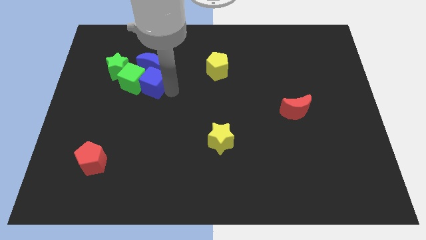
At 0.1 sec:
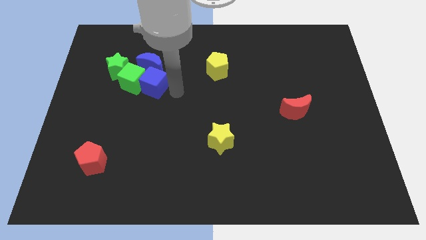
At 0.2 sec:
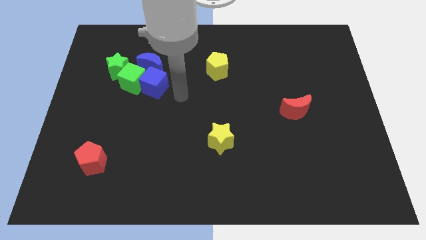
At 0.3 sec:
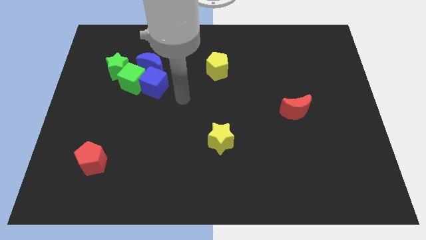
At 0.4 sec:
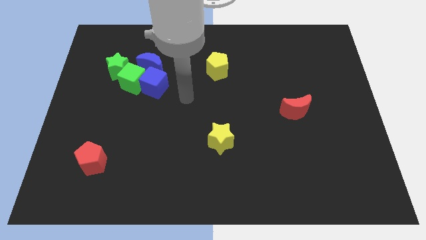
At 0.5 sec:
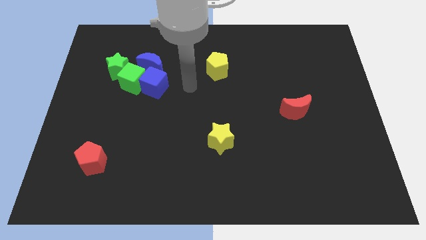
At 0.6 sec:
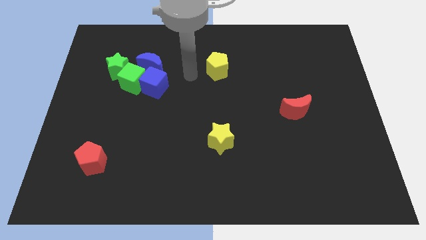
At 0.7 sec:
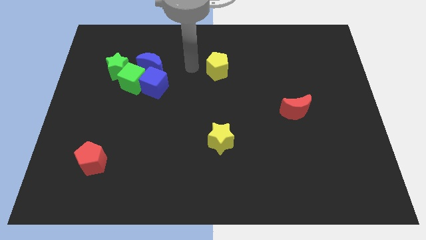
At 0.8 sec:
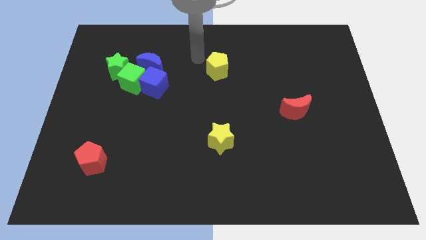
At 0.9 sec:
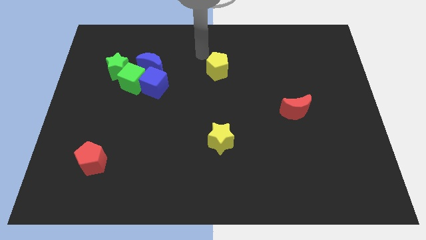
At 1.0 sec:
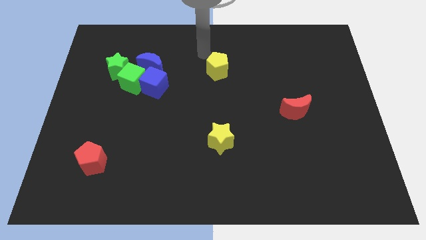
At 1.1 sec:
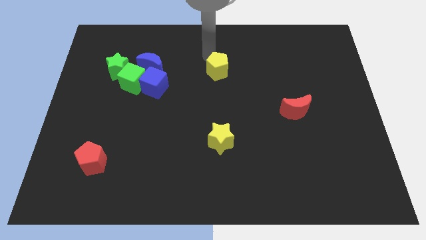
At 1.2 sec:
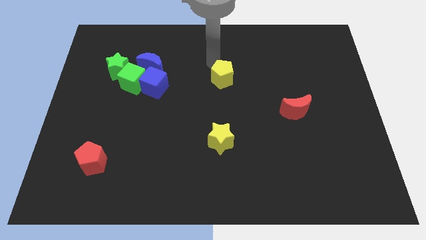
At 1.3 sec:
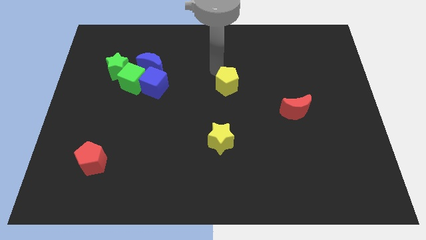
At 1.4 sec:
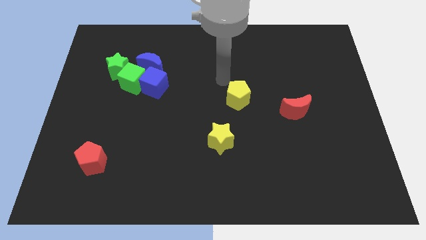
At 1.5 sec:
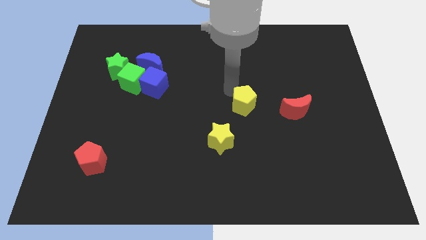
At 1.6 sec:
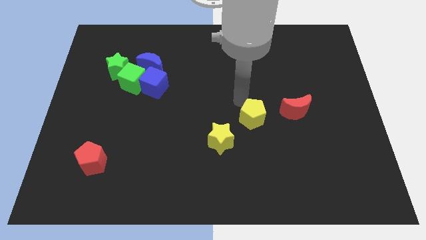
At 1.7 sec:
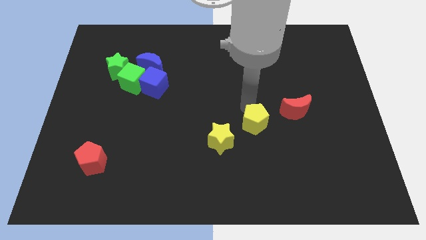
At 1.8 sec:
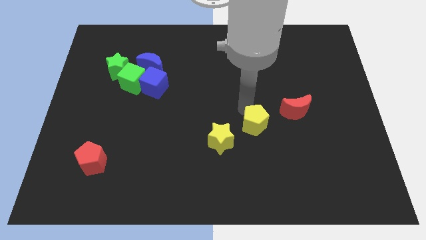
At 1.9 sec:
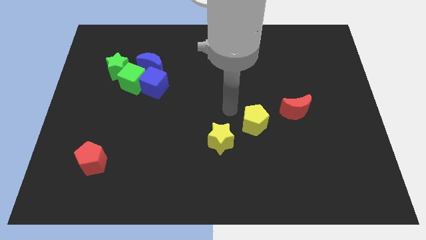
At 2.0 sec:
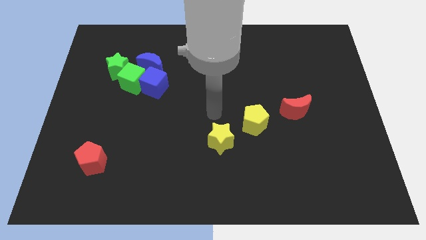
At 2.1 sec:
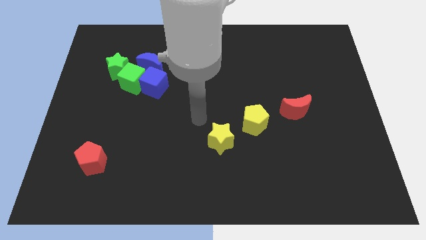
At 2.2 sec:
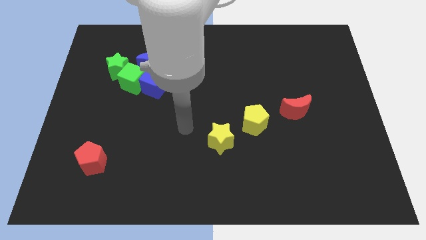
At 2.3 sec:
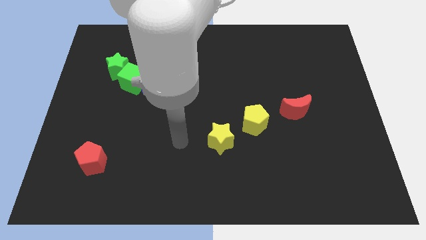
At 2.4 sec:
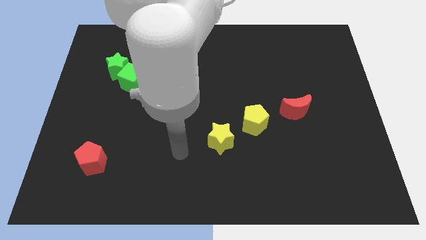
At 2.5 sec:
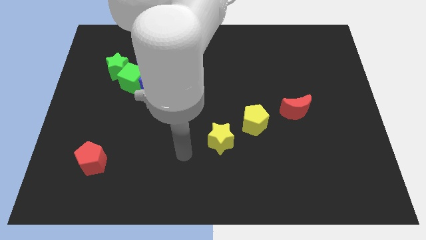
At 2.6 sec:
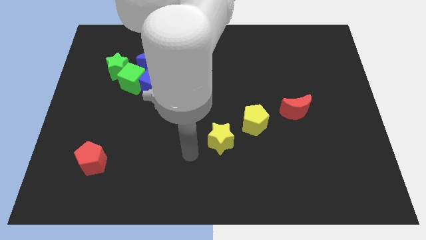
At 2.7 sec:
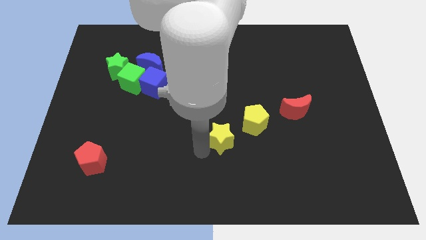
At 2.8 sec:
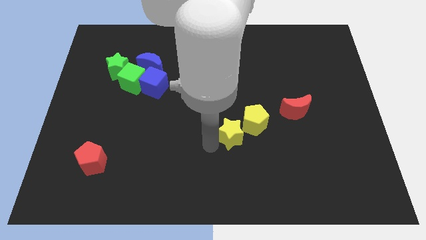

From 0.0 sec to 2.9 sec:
move the yellow pentagon at the top right side of the yellow star

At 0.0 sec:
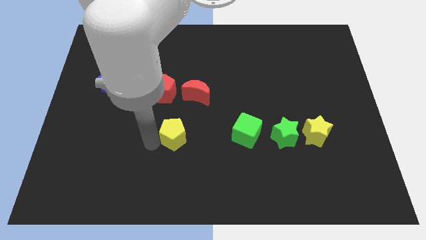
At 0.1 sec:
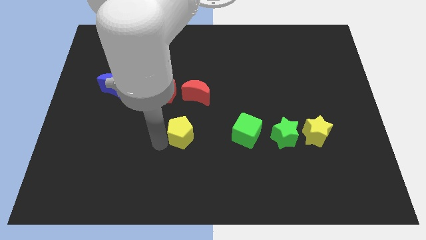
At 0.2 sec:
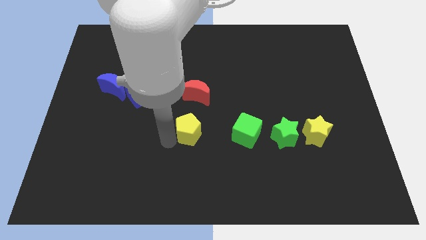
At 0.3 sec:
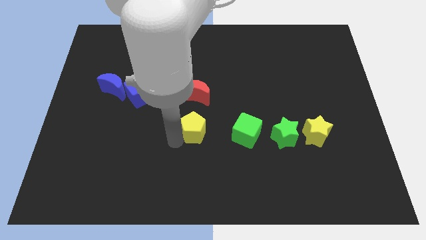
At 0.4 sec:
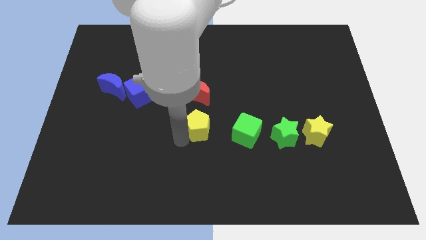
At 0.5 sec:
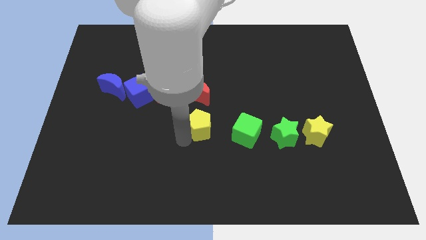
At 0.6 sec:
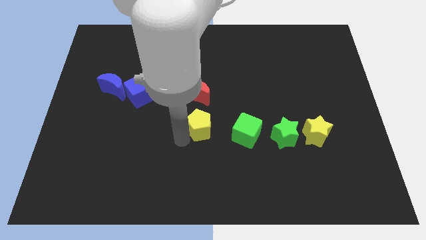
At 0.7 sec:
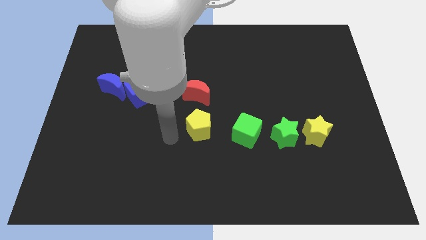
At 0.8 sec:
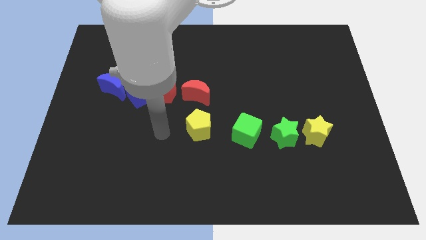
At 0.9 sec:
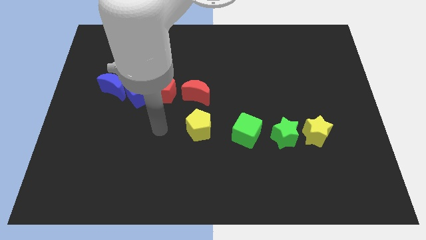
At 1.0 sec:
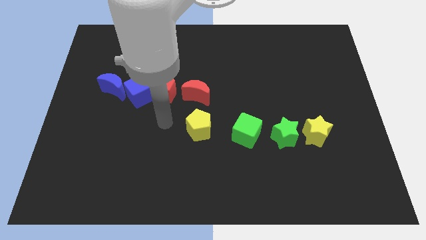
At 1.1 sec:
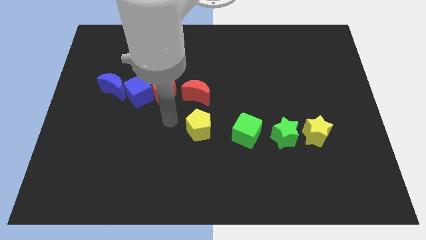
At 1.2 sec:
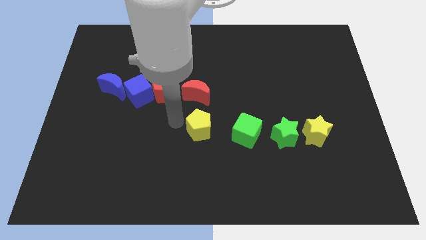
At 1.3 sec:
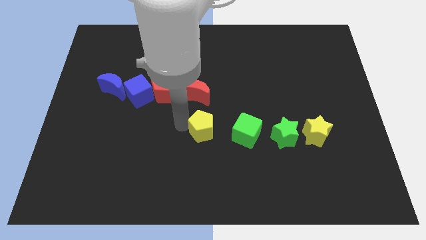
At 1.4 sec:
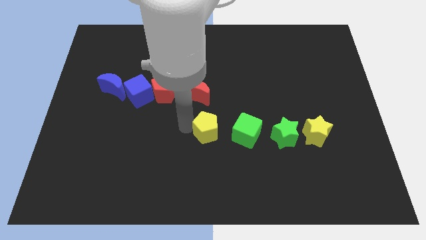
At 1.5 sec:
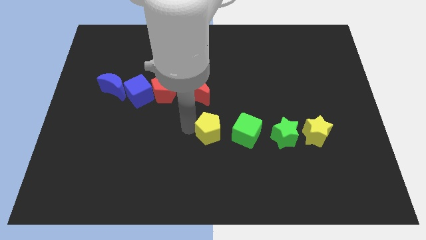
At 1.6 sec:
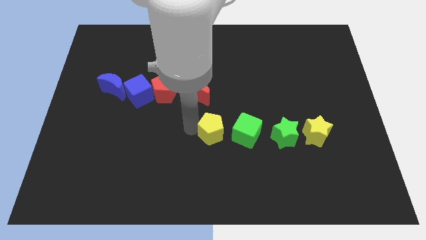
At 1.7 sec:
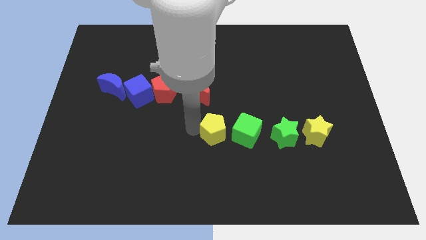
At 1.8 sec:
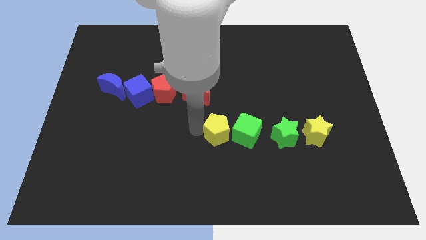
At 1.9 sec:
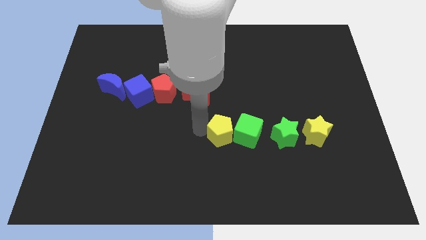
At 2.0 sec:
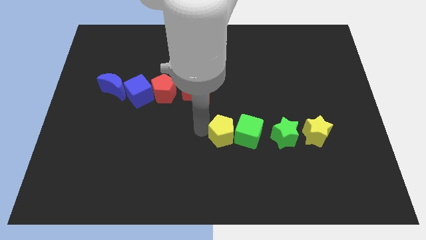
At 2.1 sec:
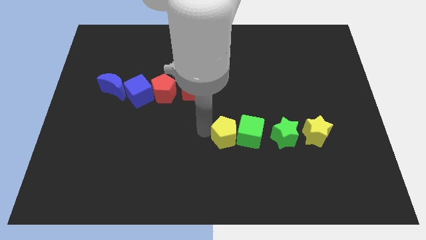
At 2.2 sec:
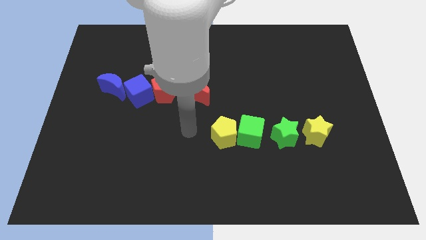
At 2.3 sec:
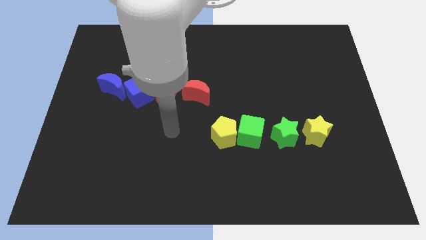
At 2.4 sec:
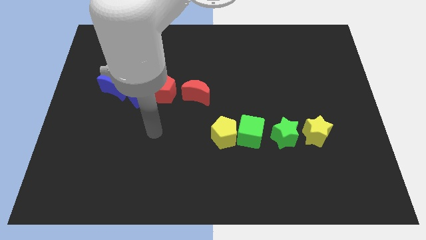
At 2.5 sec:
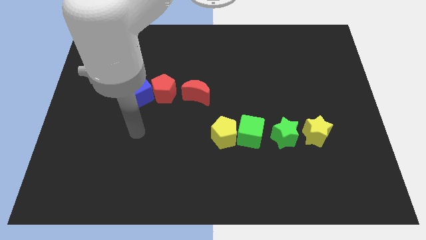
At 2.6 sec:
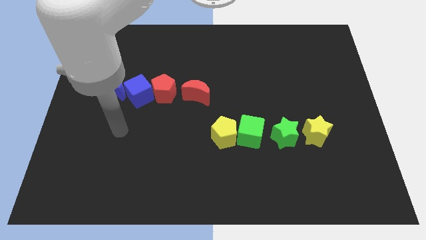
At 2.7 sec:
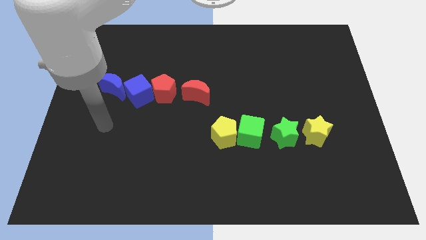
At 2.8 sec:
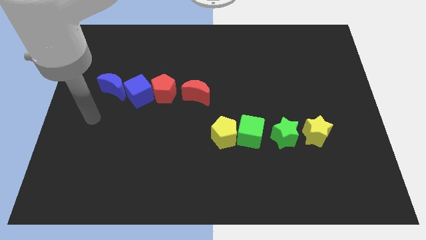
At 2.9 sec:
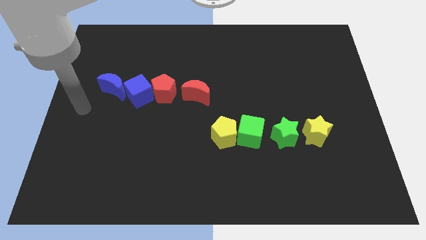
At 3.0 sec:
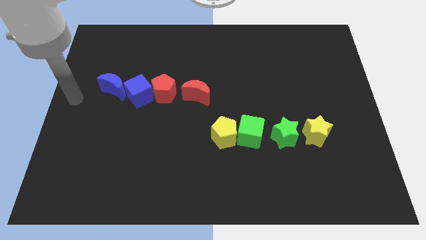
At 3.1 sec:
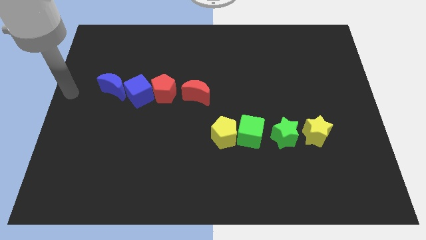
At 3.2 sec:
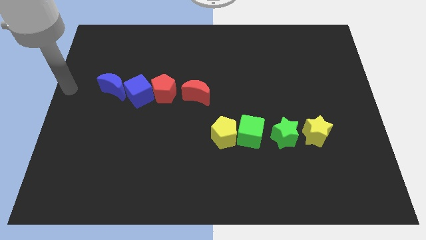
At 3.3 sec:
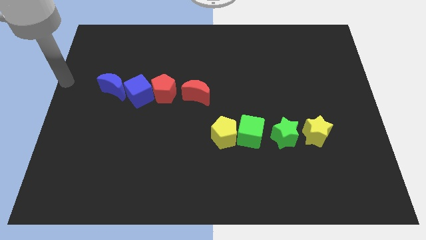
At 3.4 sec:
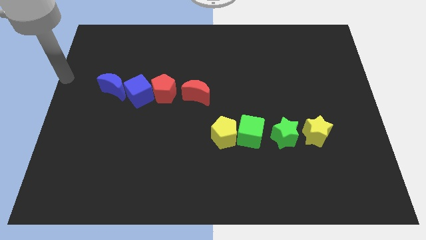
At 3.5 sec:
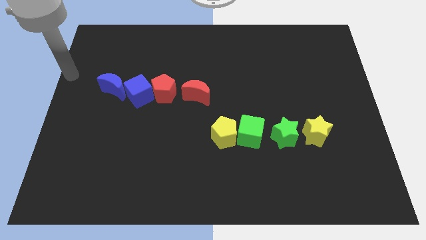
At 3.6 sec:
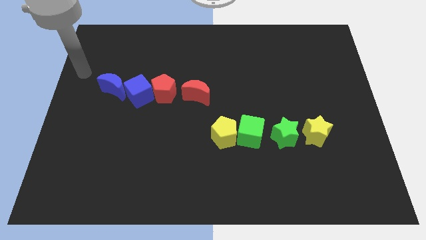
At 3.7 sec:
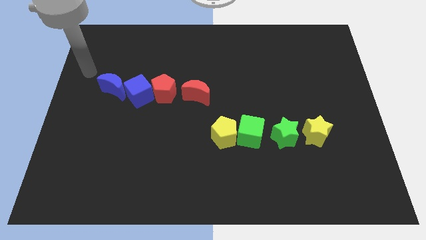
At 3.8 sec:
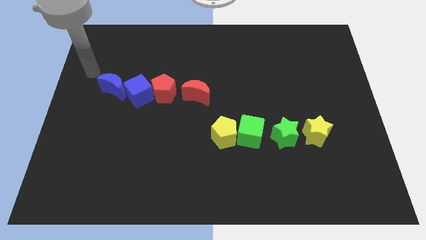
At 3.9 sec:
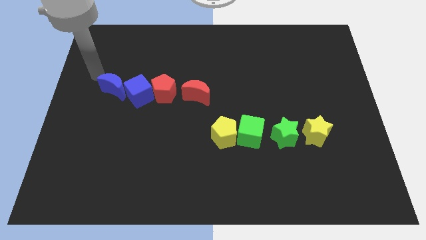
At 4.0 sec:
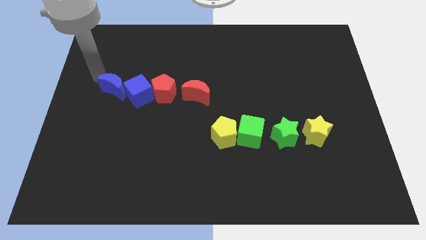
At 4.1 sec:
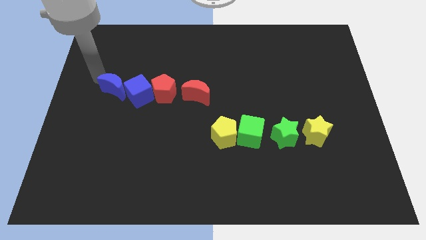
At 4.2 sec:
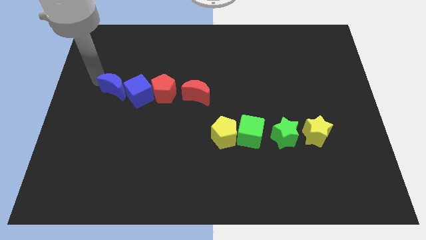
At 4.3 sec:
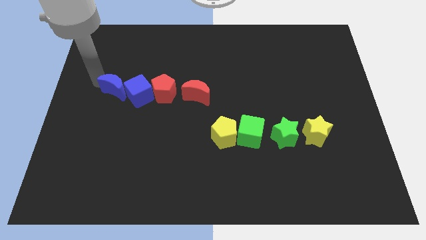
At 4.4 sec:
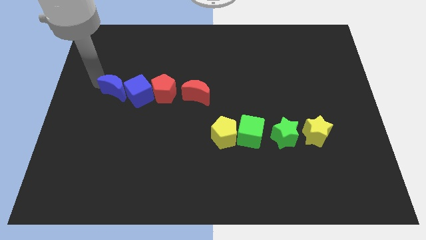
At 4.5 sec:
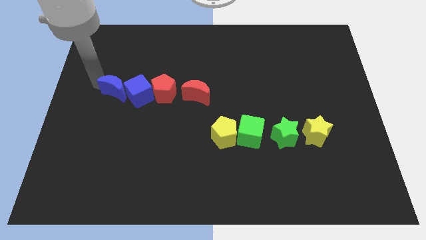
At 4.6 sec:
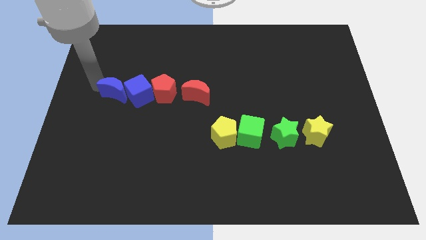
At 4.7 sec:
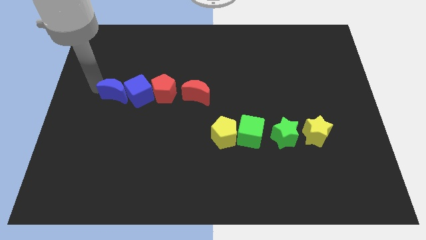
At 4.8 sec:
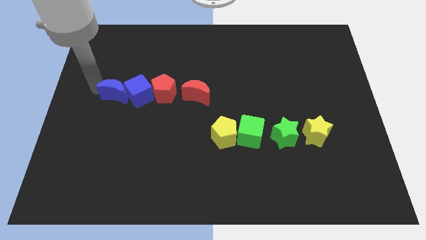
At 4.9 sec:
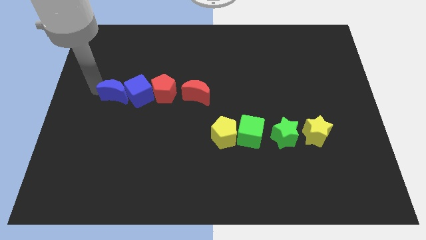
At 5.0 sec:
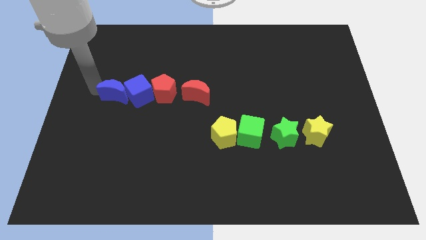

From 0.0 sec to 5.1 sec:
move your arm close to the blue moon

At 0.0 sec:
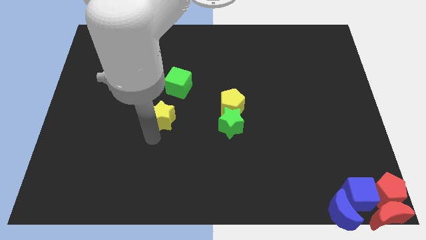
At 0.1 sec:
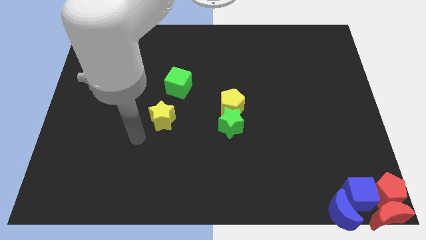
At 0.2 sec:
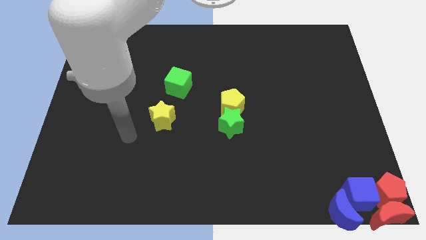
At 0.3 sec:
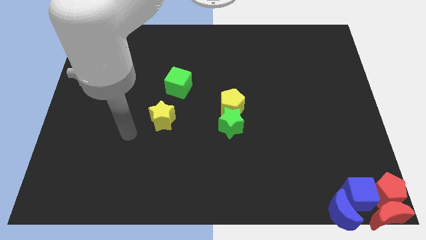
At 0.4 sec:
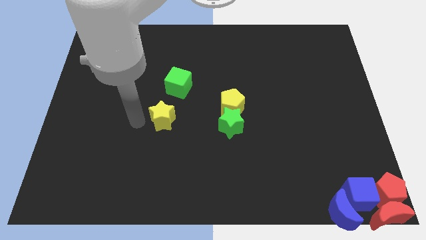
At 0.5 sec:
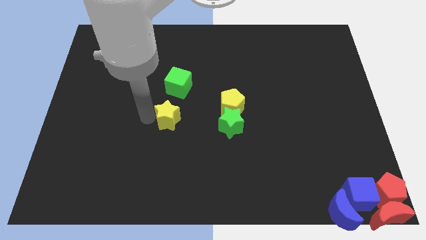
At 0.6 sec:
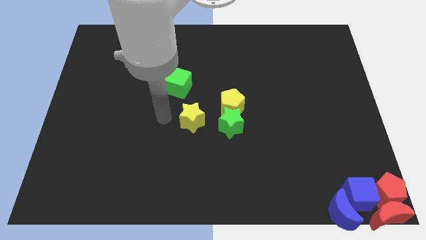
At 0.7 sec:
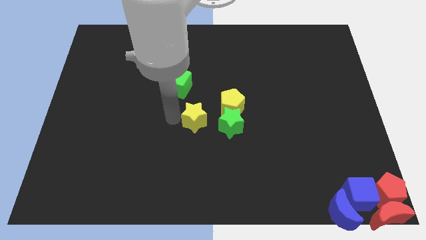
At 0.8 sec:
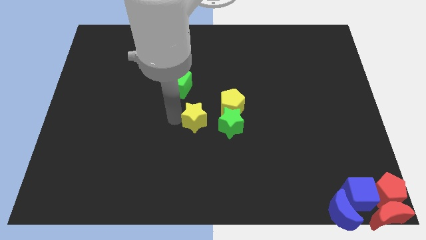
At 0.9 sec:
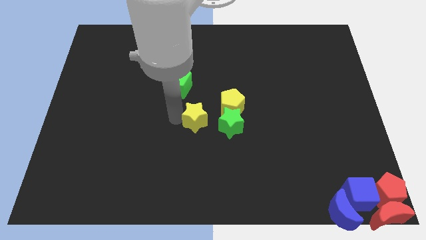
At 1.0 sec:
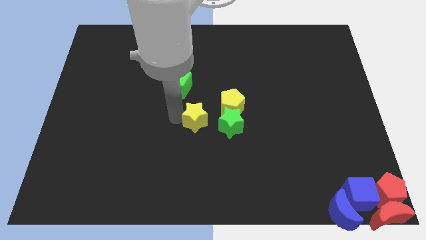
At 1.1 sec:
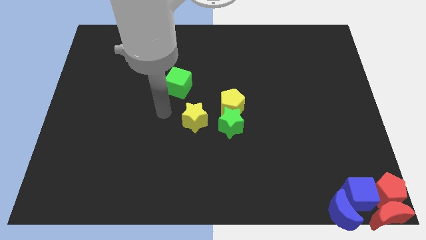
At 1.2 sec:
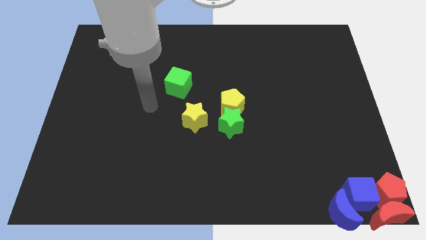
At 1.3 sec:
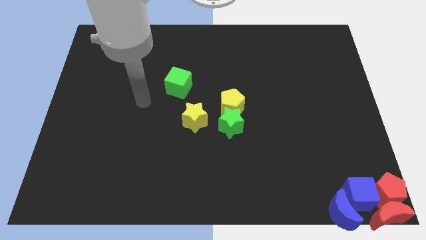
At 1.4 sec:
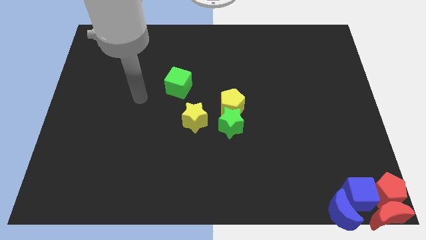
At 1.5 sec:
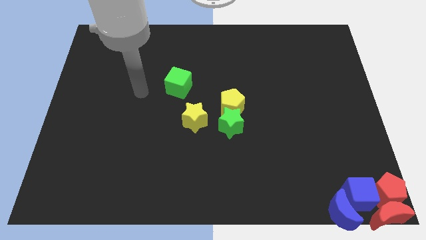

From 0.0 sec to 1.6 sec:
place the yellow star at the center of the board
